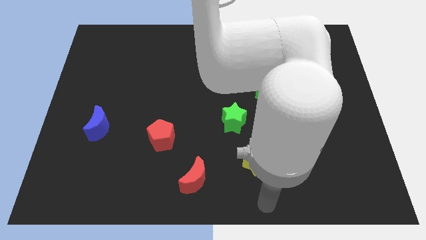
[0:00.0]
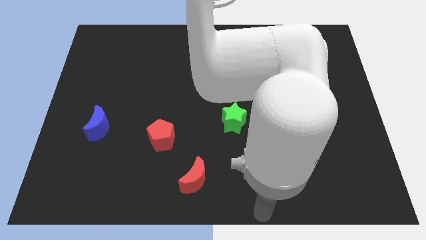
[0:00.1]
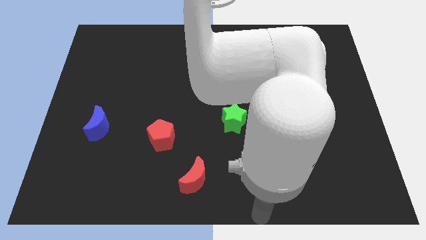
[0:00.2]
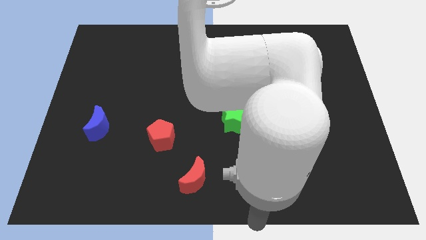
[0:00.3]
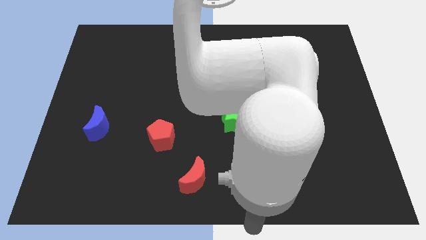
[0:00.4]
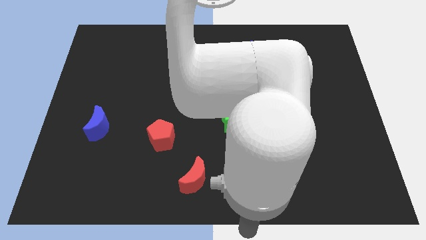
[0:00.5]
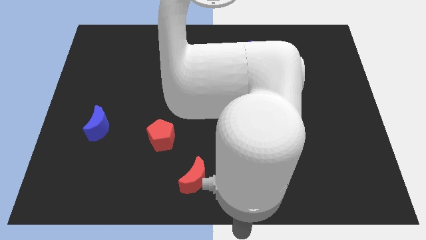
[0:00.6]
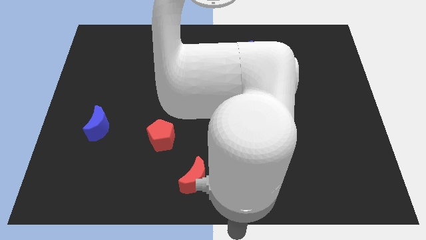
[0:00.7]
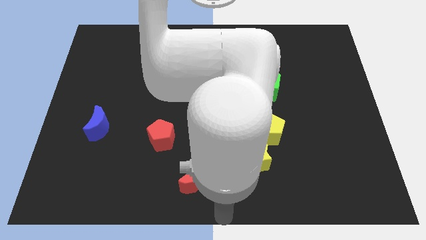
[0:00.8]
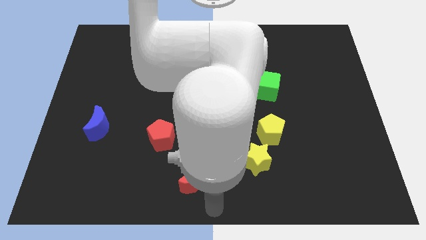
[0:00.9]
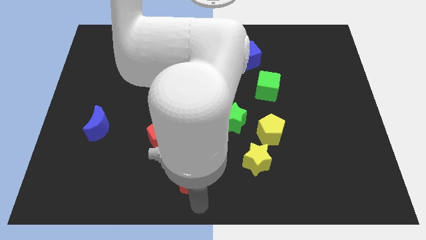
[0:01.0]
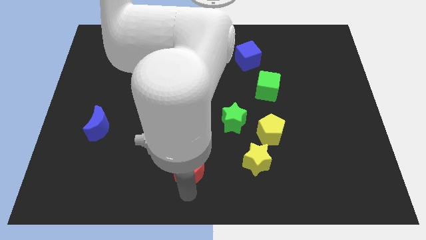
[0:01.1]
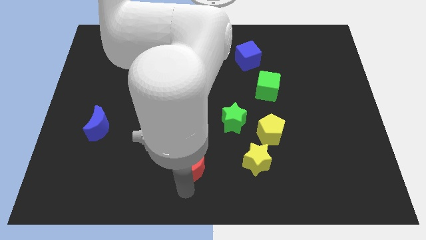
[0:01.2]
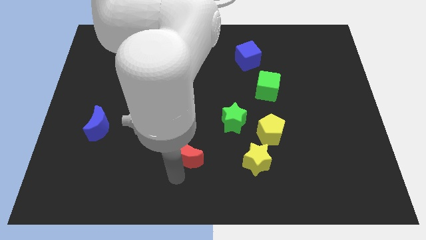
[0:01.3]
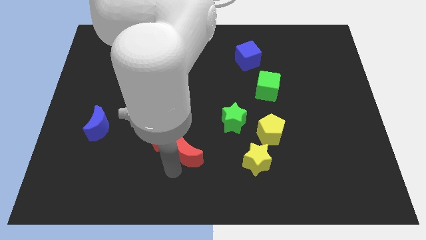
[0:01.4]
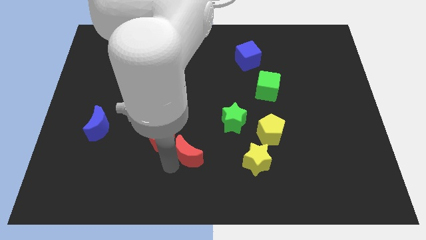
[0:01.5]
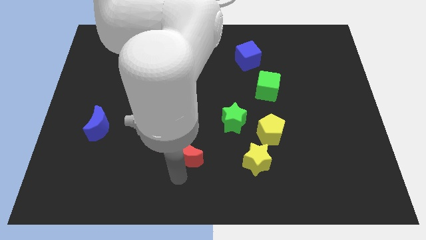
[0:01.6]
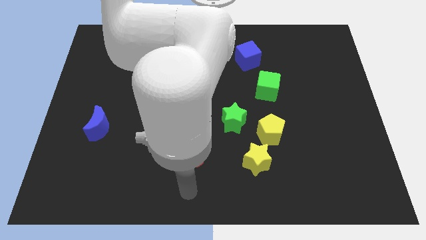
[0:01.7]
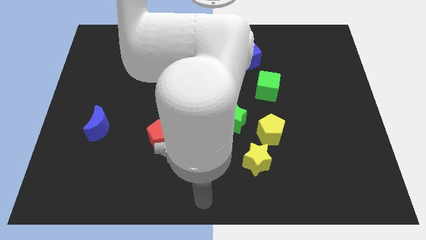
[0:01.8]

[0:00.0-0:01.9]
move the red moon towards the red pentagon

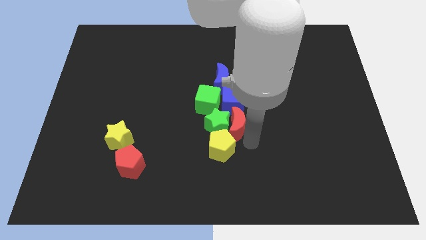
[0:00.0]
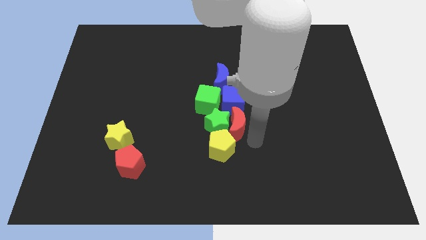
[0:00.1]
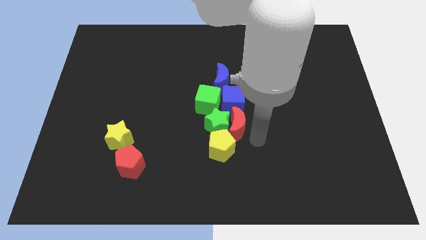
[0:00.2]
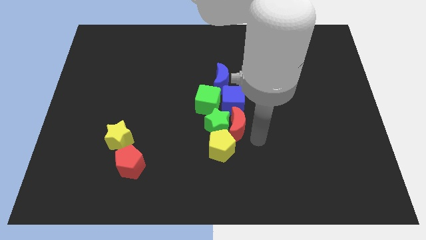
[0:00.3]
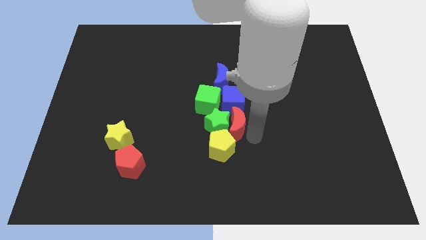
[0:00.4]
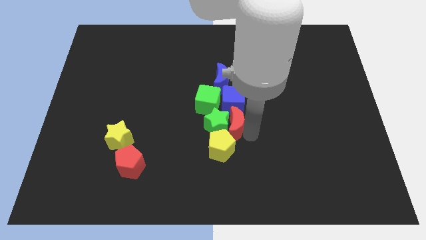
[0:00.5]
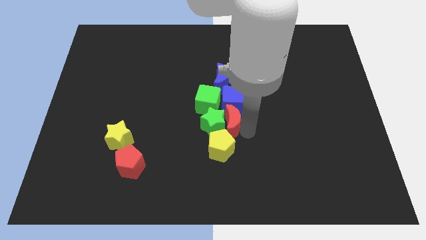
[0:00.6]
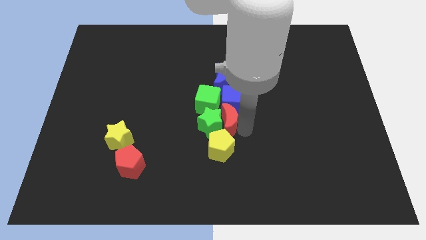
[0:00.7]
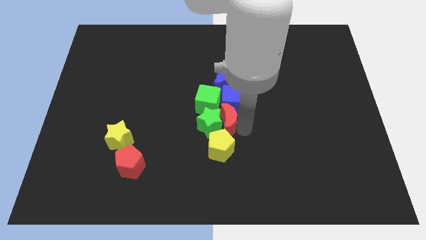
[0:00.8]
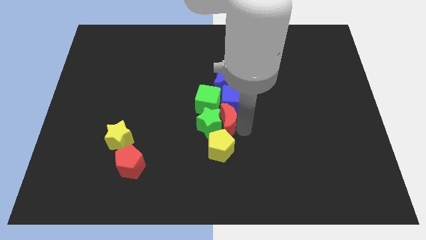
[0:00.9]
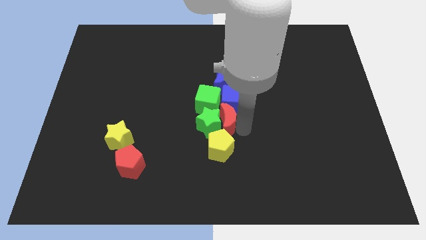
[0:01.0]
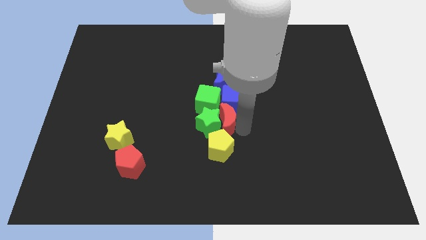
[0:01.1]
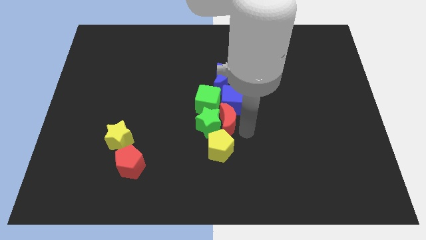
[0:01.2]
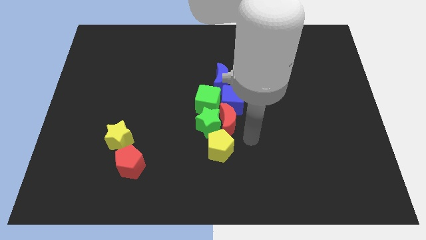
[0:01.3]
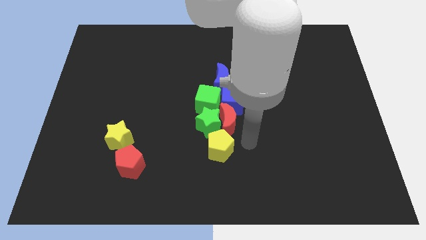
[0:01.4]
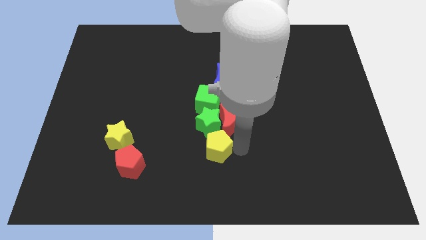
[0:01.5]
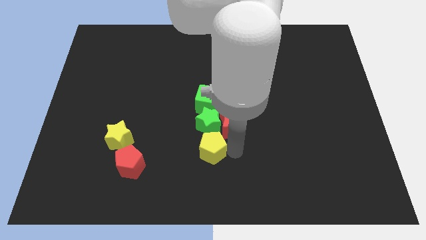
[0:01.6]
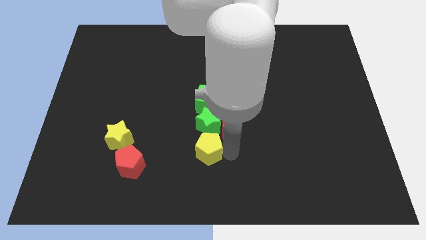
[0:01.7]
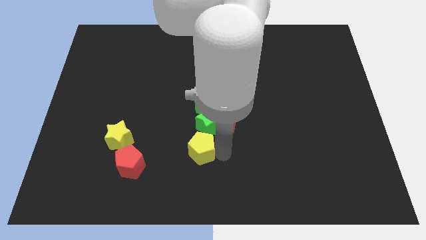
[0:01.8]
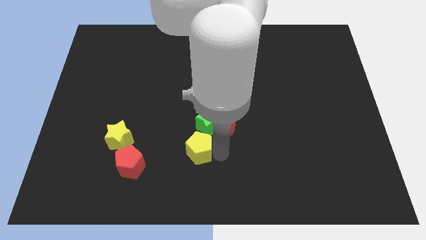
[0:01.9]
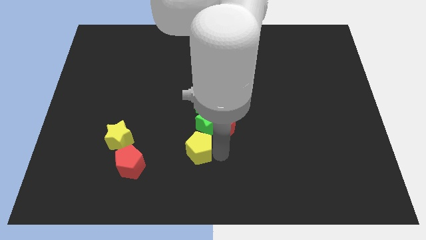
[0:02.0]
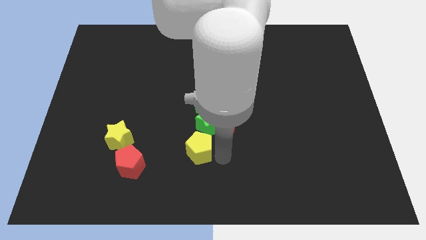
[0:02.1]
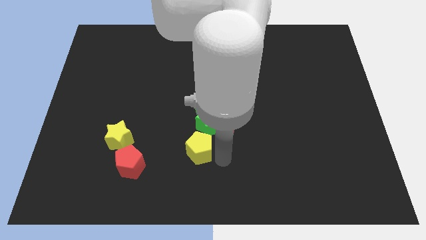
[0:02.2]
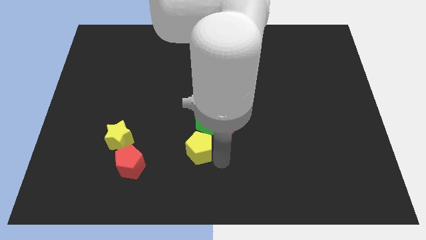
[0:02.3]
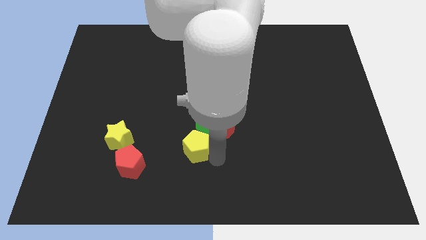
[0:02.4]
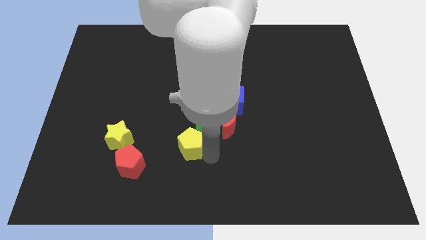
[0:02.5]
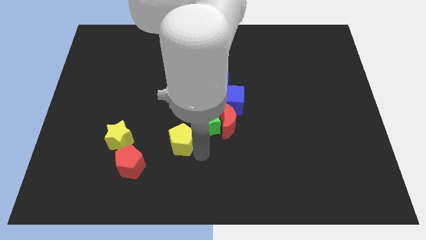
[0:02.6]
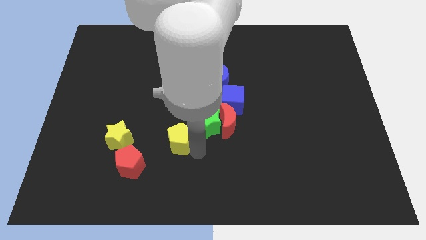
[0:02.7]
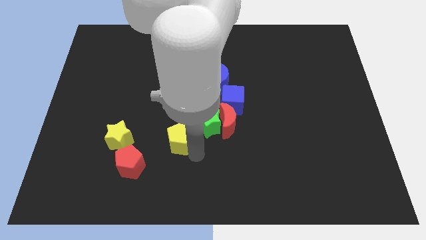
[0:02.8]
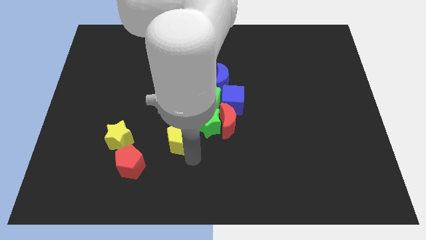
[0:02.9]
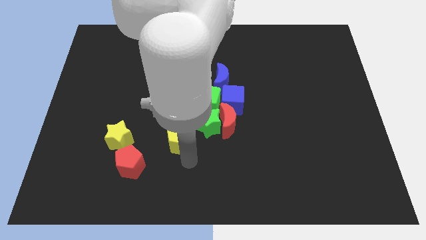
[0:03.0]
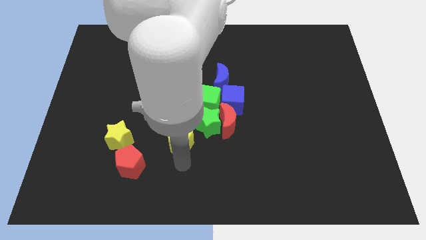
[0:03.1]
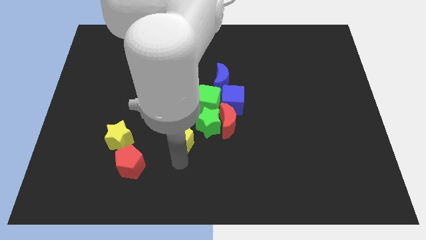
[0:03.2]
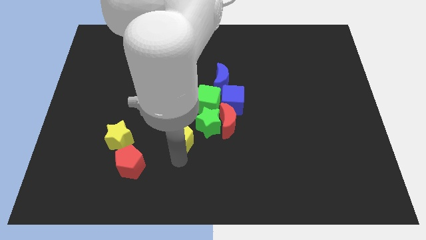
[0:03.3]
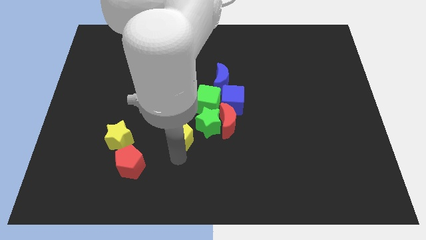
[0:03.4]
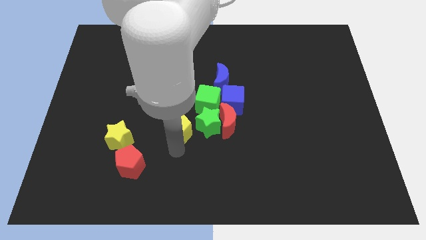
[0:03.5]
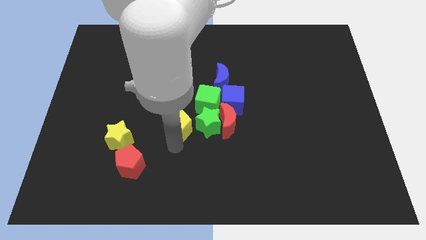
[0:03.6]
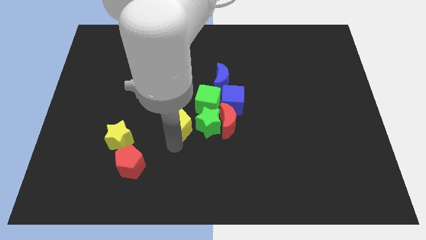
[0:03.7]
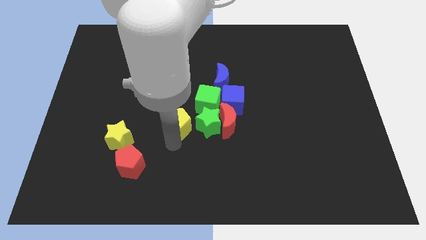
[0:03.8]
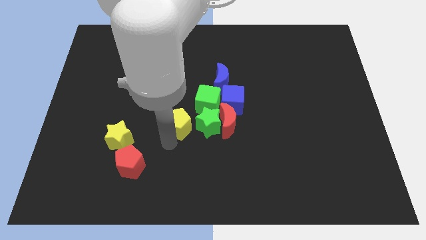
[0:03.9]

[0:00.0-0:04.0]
place the yellow pentagon to left side of green star

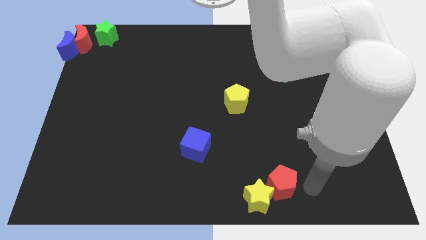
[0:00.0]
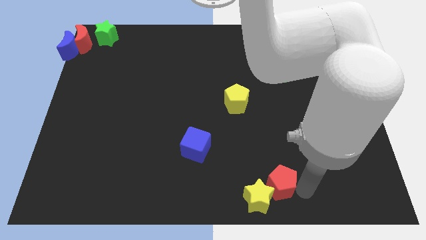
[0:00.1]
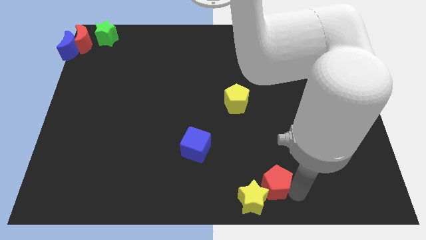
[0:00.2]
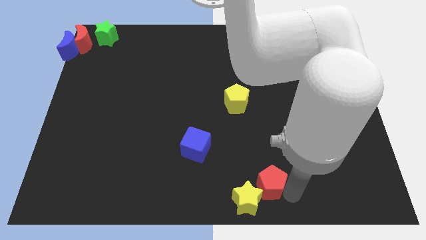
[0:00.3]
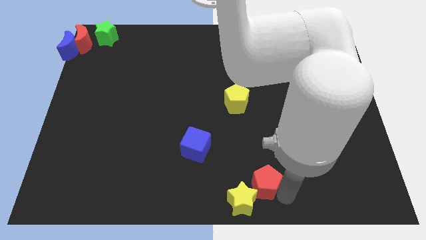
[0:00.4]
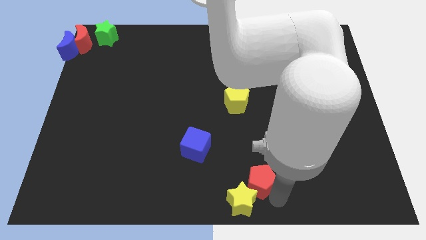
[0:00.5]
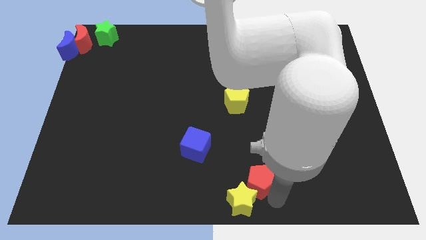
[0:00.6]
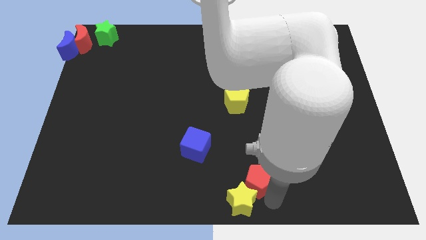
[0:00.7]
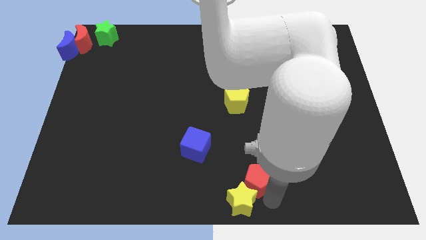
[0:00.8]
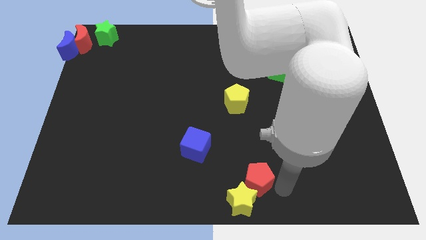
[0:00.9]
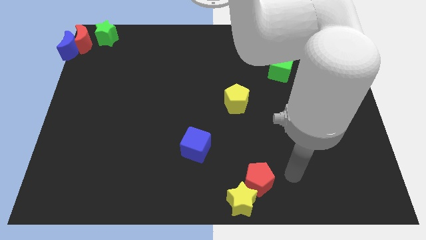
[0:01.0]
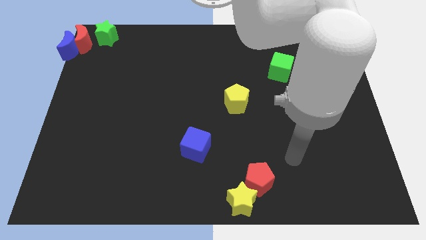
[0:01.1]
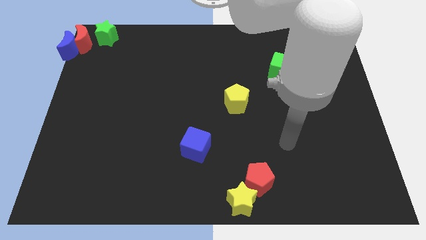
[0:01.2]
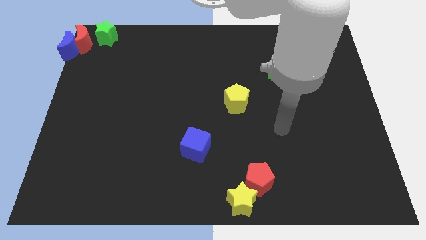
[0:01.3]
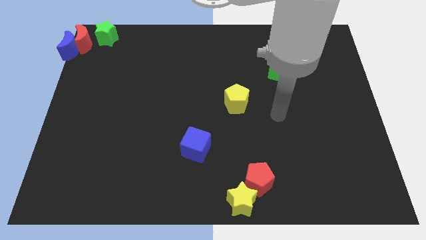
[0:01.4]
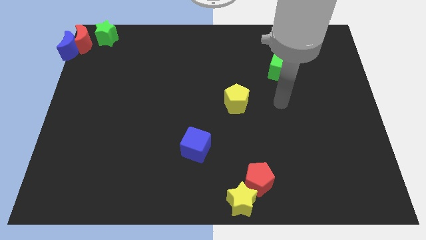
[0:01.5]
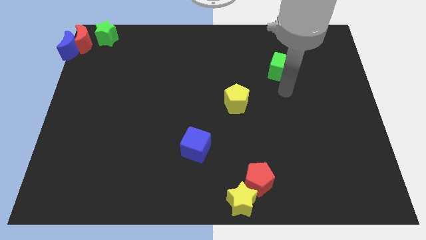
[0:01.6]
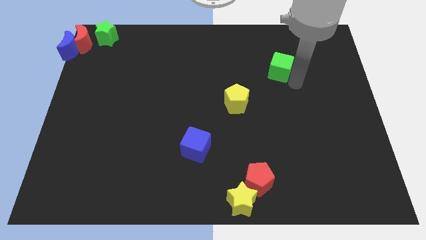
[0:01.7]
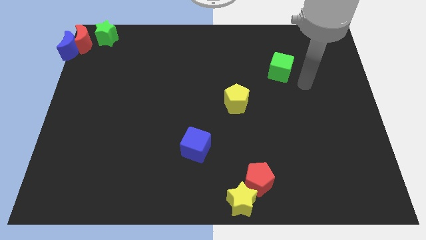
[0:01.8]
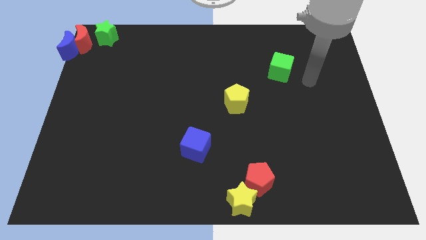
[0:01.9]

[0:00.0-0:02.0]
push the yellow star and red pentagon slightly to the left side of the board

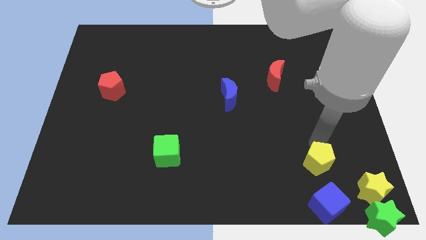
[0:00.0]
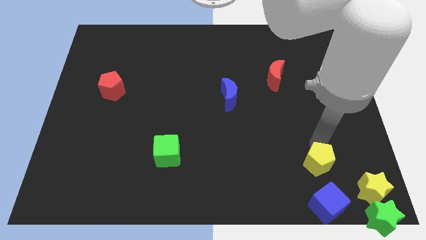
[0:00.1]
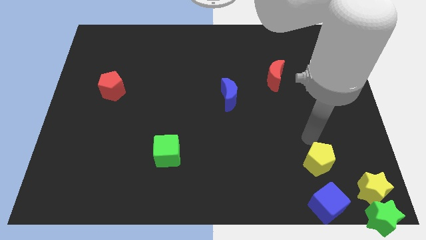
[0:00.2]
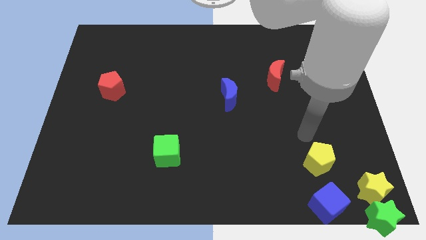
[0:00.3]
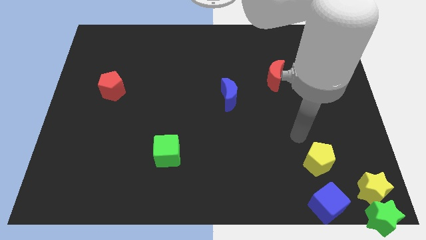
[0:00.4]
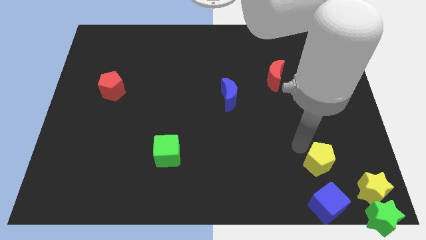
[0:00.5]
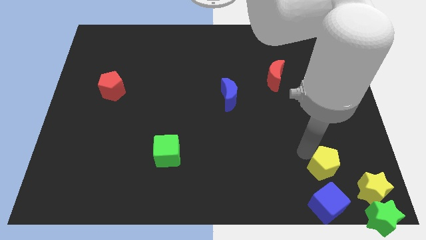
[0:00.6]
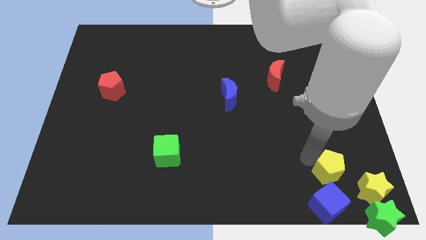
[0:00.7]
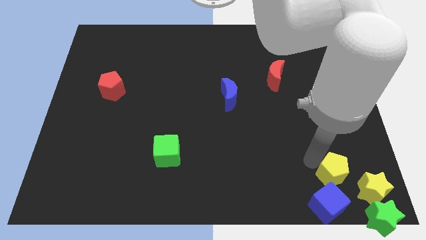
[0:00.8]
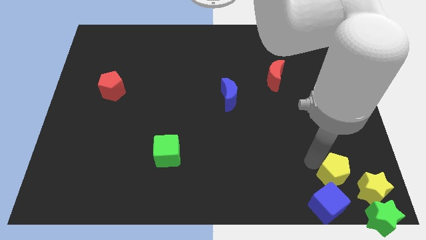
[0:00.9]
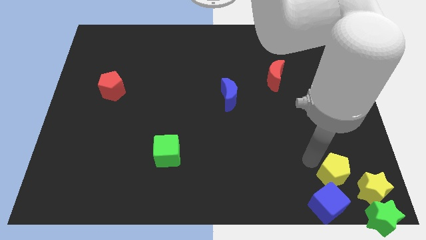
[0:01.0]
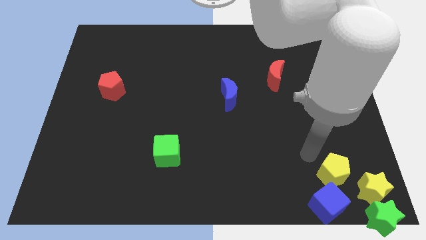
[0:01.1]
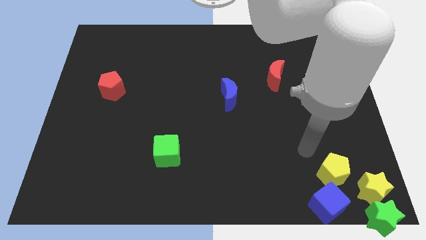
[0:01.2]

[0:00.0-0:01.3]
put yellow pentagon above blue cube
